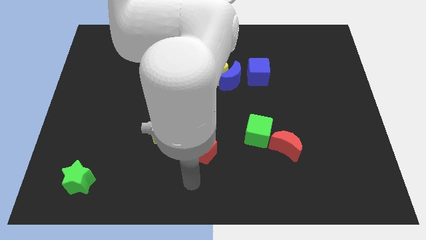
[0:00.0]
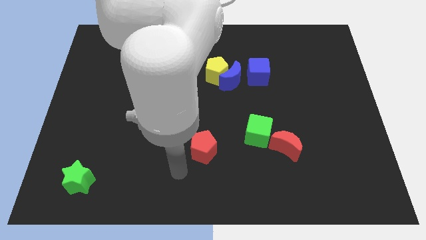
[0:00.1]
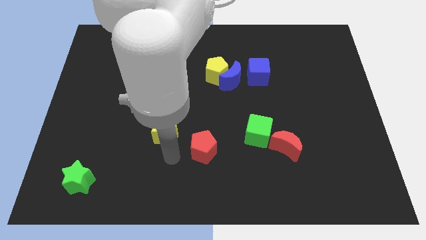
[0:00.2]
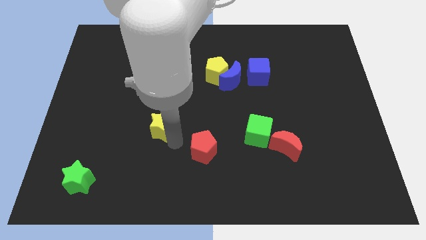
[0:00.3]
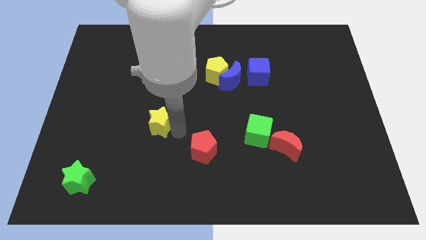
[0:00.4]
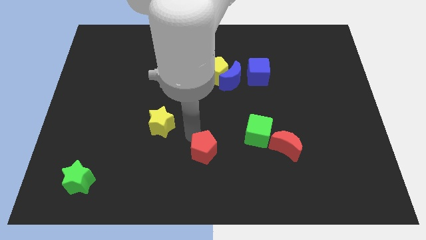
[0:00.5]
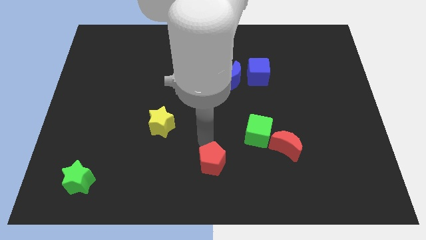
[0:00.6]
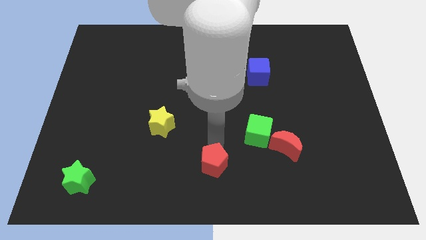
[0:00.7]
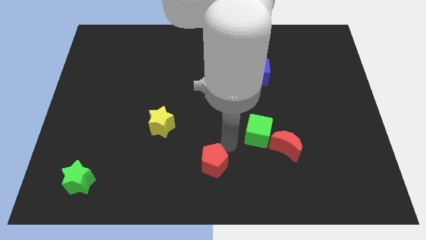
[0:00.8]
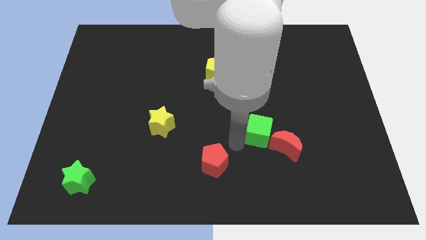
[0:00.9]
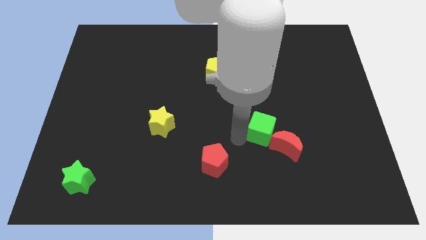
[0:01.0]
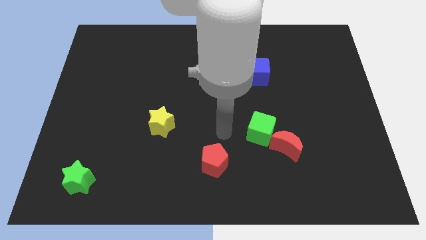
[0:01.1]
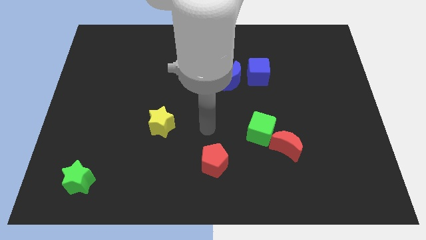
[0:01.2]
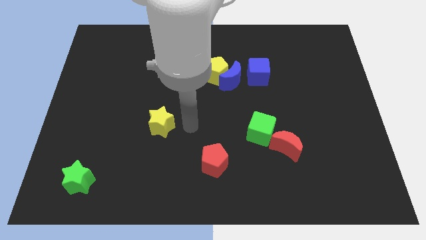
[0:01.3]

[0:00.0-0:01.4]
place the red pentagon slightly towards bottom center

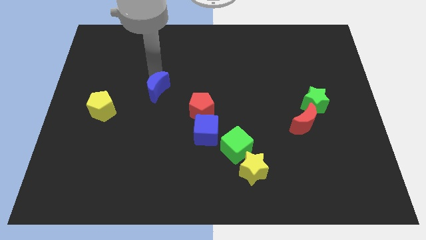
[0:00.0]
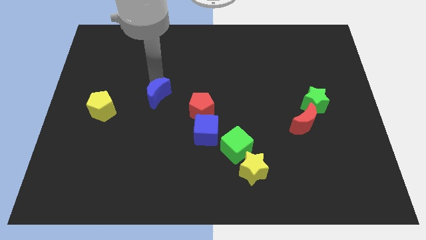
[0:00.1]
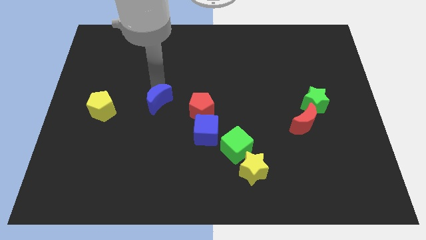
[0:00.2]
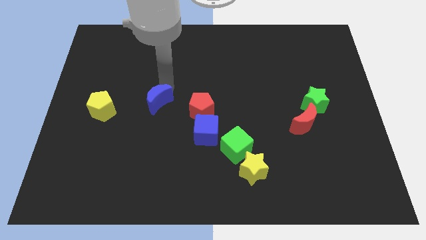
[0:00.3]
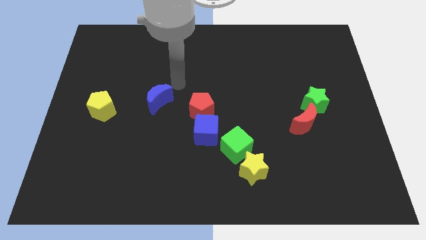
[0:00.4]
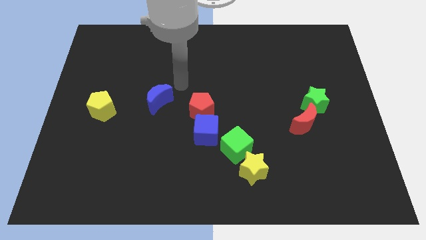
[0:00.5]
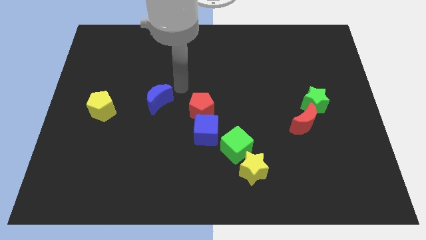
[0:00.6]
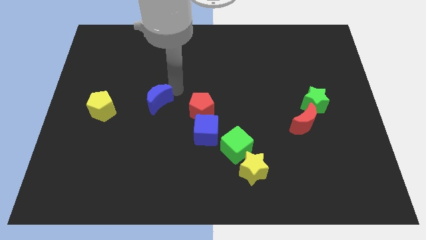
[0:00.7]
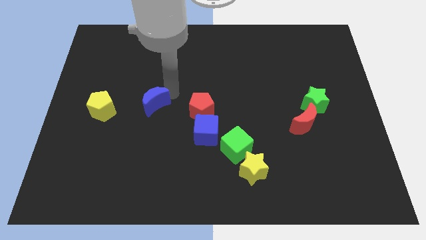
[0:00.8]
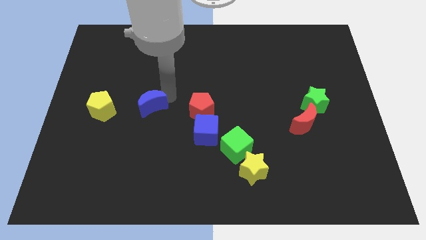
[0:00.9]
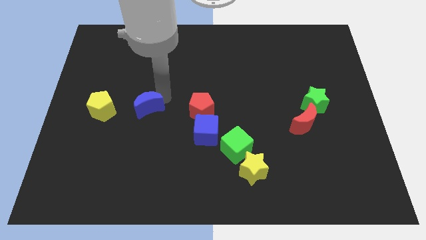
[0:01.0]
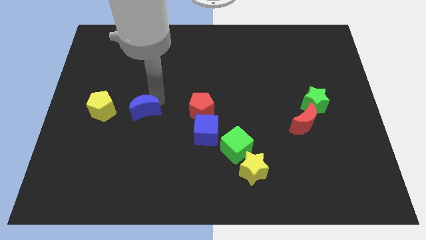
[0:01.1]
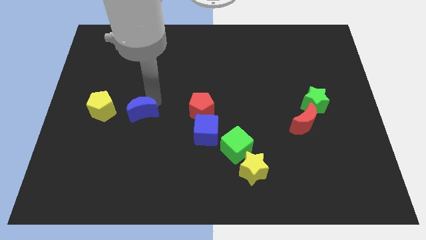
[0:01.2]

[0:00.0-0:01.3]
put the blue moon in between the red and yellow pentagons

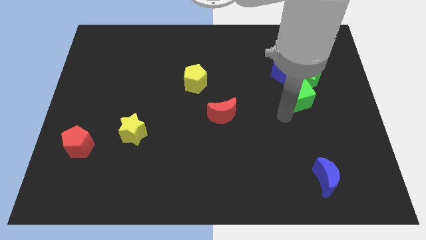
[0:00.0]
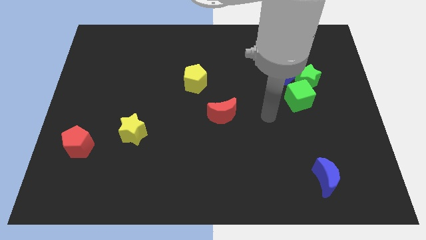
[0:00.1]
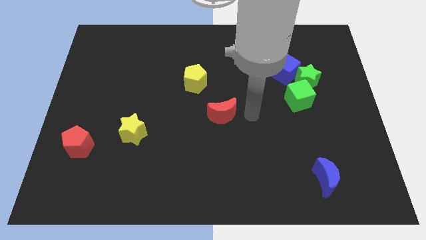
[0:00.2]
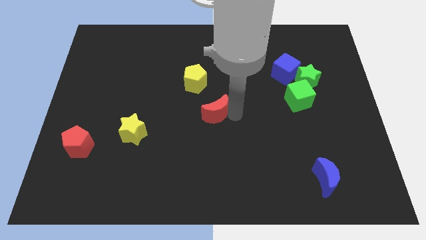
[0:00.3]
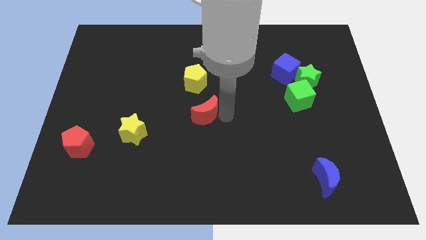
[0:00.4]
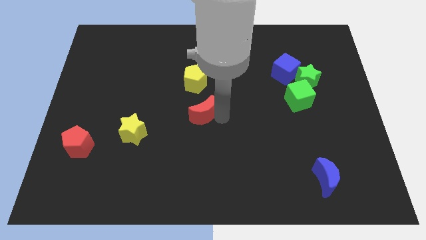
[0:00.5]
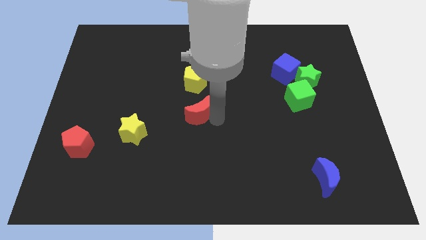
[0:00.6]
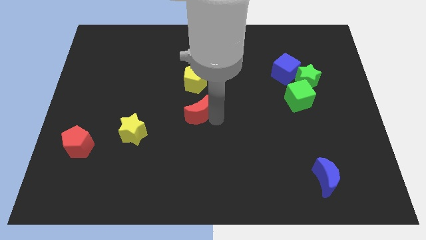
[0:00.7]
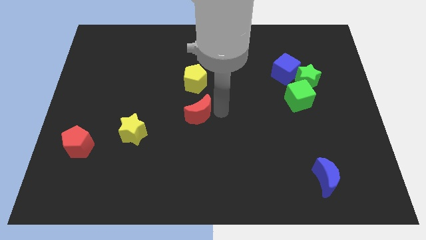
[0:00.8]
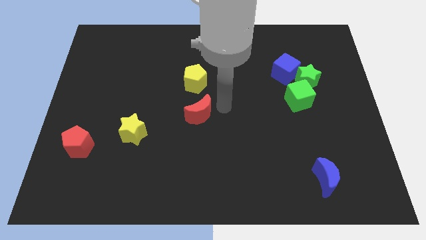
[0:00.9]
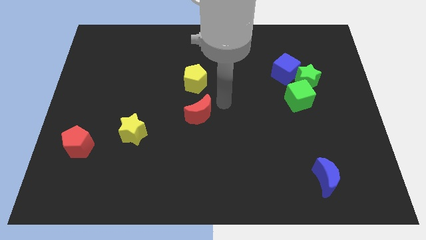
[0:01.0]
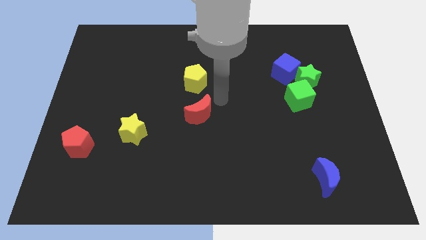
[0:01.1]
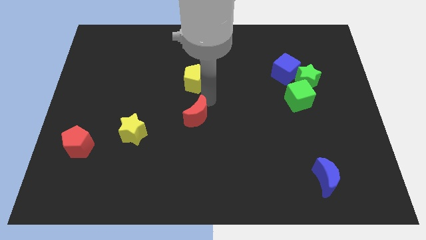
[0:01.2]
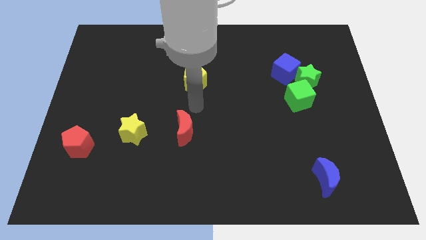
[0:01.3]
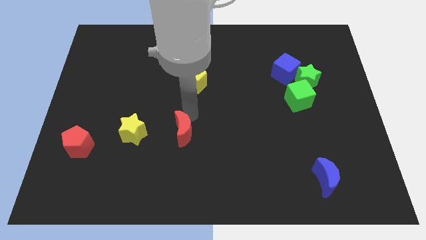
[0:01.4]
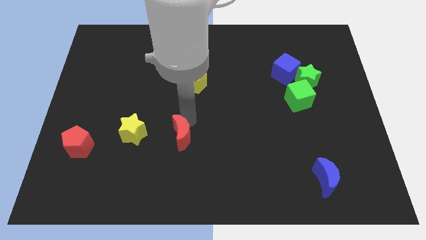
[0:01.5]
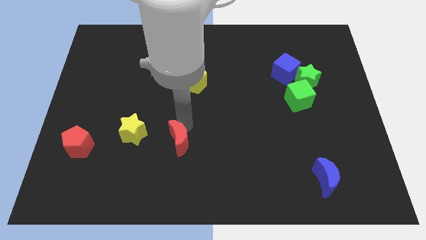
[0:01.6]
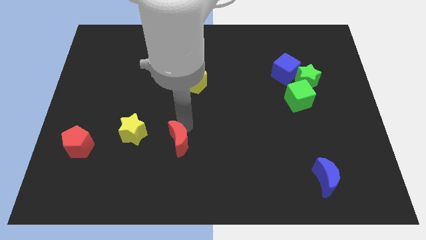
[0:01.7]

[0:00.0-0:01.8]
put the red moon parallel right to the yellow star

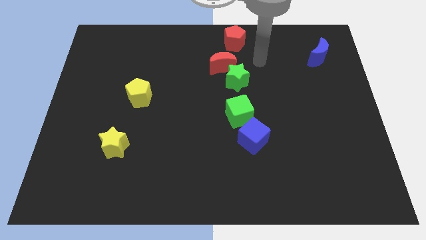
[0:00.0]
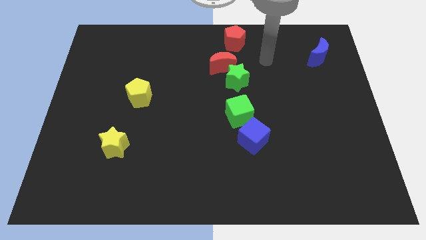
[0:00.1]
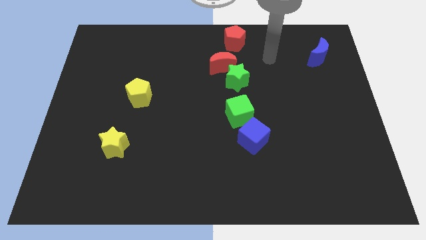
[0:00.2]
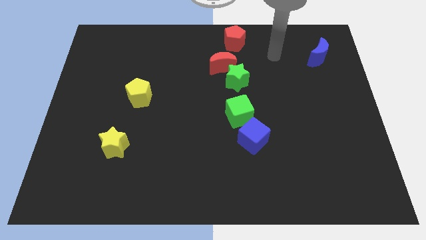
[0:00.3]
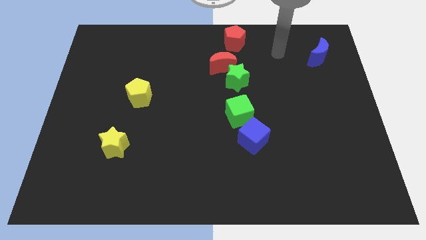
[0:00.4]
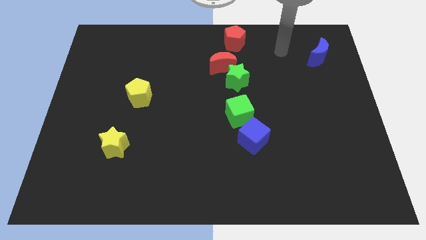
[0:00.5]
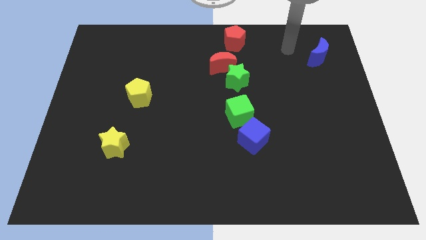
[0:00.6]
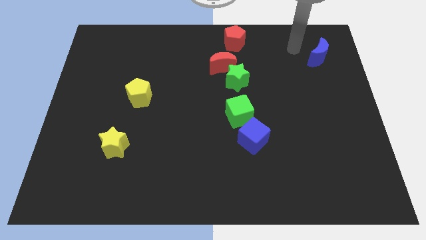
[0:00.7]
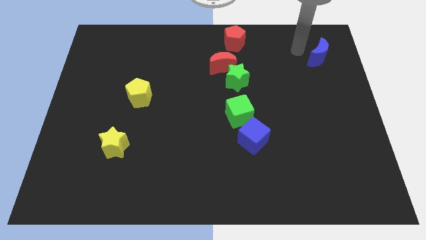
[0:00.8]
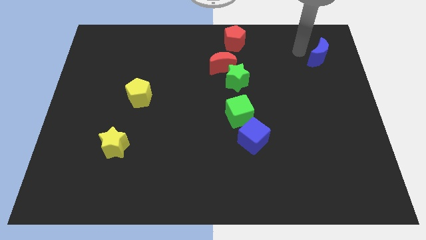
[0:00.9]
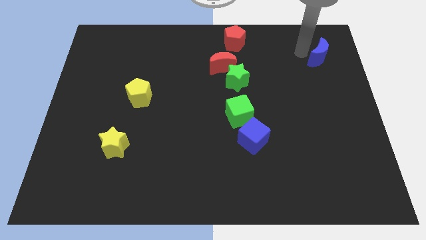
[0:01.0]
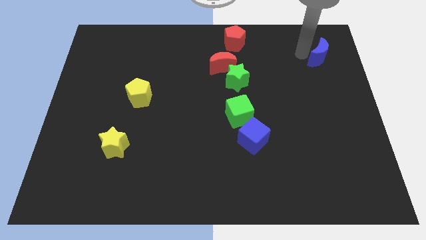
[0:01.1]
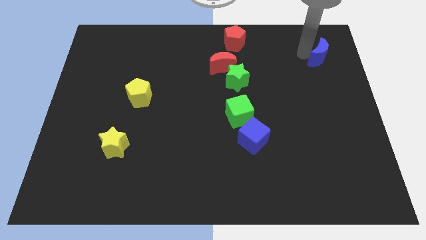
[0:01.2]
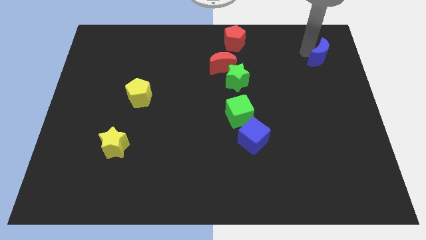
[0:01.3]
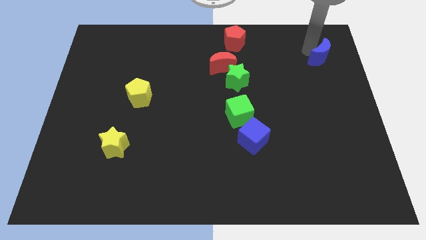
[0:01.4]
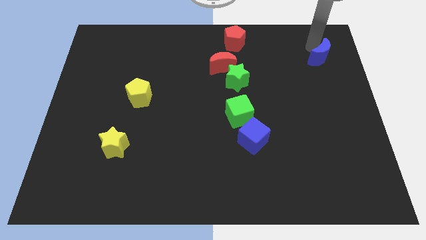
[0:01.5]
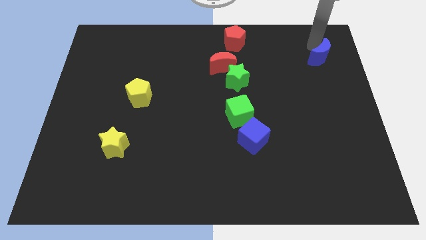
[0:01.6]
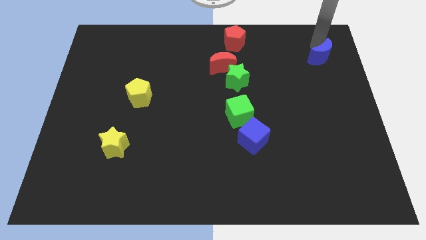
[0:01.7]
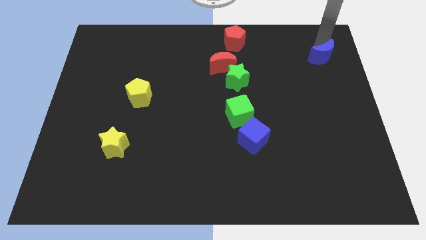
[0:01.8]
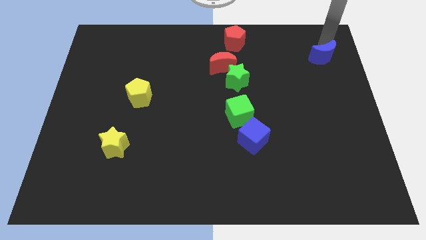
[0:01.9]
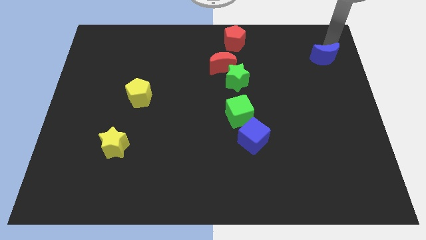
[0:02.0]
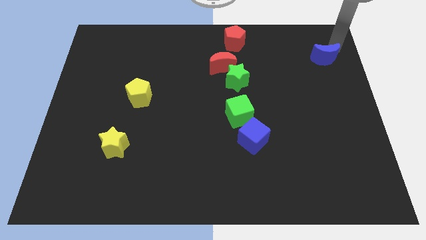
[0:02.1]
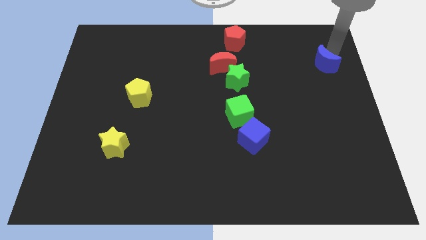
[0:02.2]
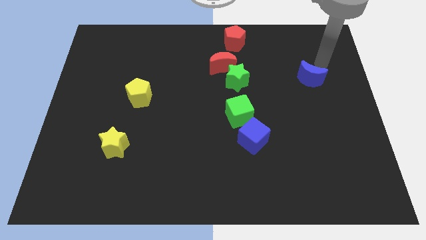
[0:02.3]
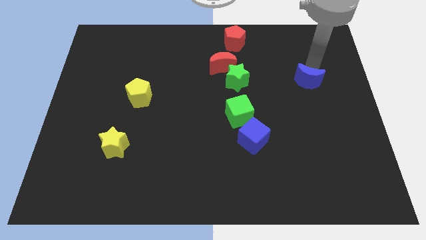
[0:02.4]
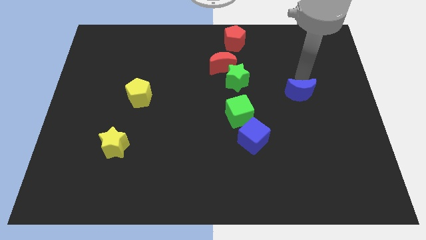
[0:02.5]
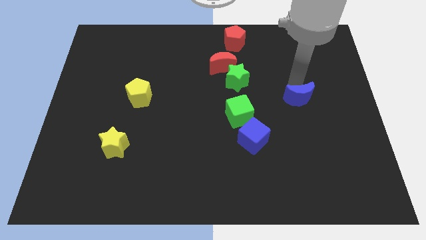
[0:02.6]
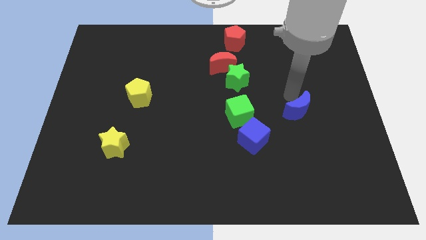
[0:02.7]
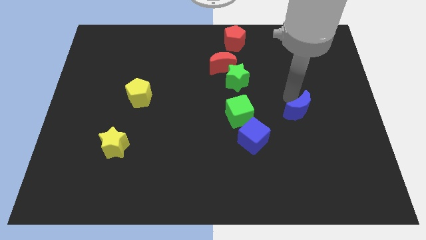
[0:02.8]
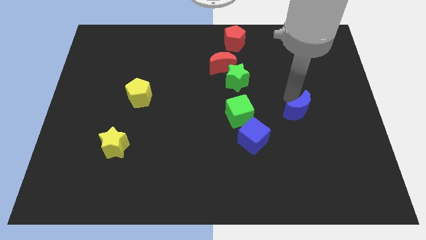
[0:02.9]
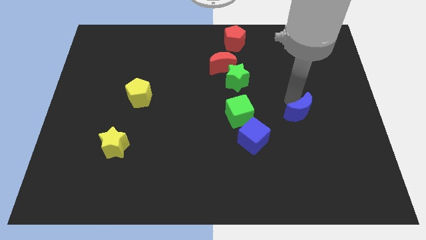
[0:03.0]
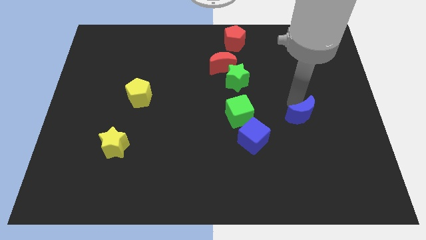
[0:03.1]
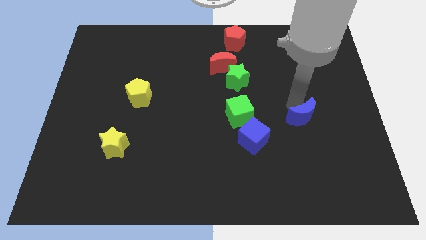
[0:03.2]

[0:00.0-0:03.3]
push the blue crescent to the right side of the green cube

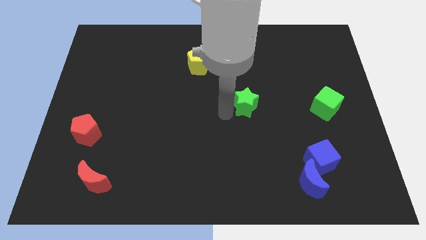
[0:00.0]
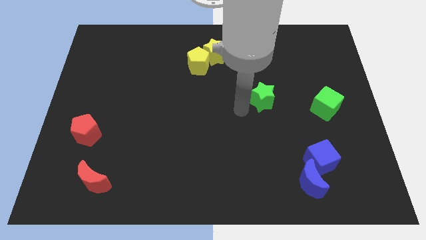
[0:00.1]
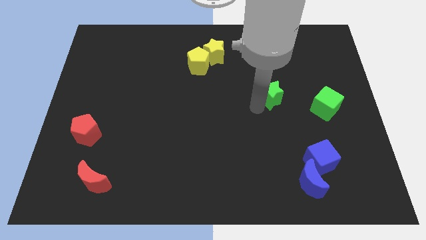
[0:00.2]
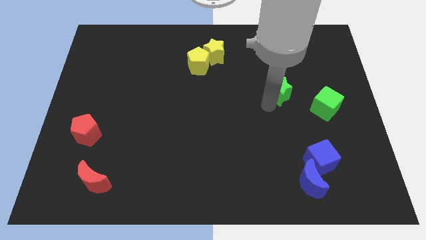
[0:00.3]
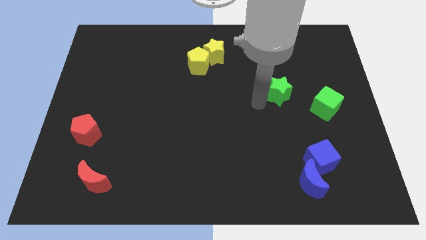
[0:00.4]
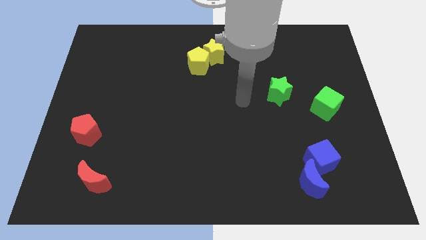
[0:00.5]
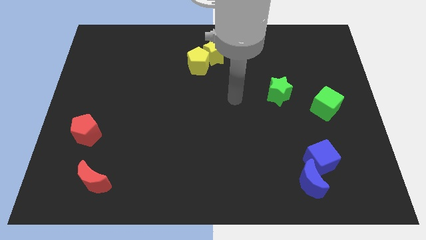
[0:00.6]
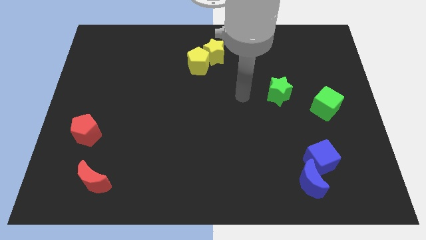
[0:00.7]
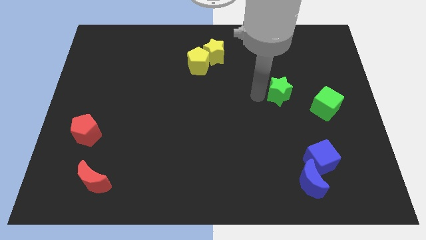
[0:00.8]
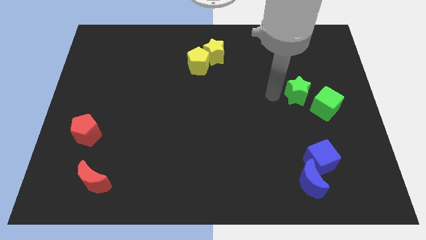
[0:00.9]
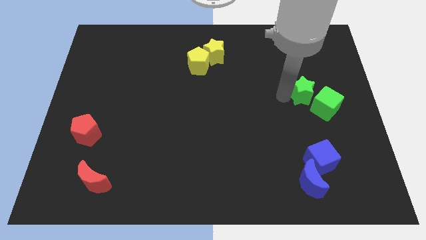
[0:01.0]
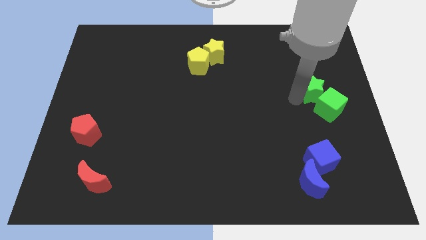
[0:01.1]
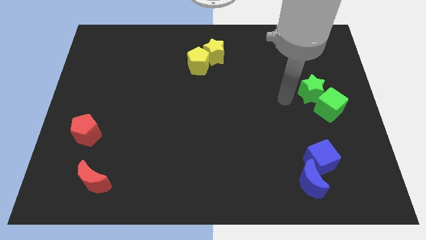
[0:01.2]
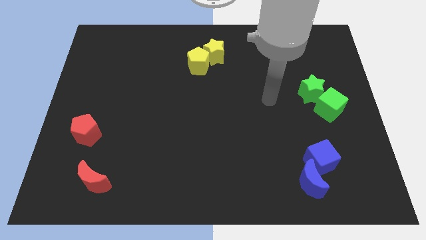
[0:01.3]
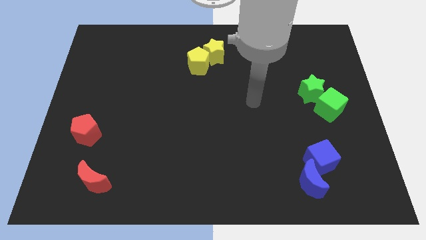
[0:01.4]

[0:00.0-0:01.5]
move the green star into the green cube
